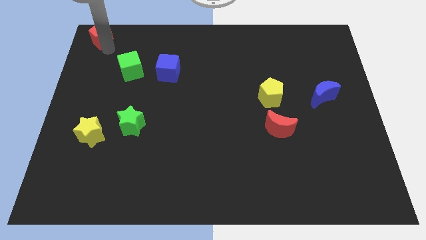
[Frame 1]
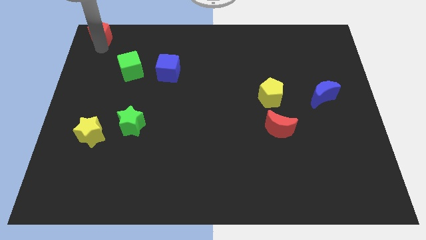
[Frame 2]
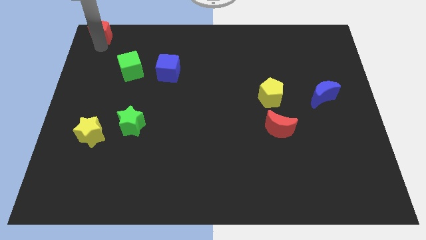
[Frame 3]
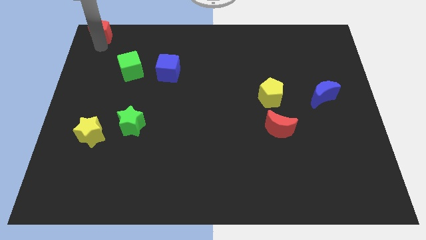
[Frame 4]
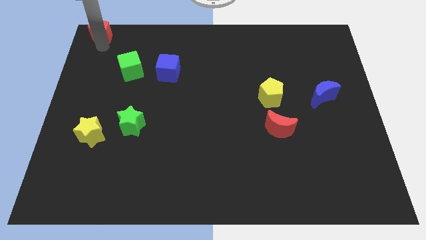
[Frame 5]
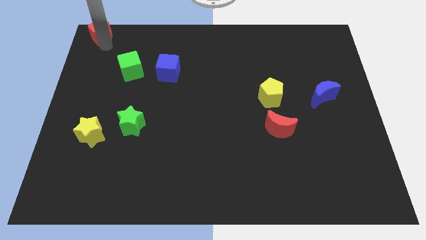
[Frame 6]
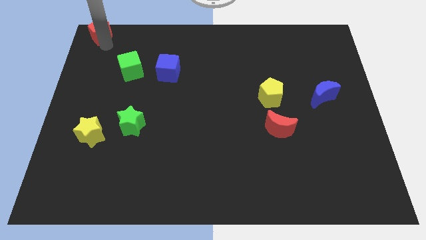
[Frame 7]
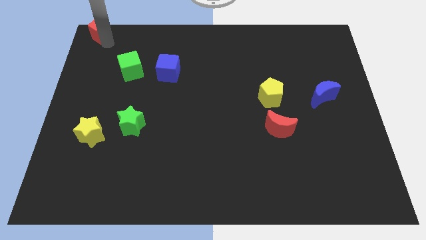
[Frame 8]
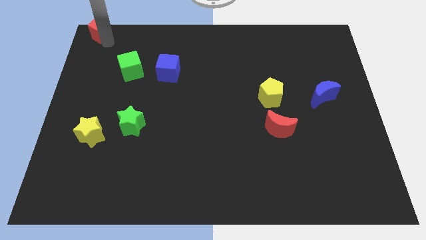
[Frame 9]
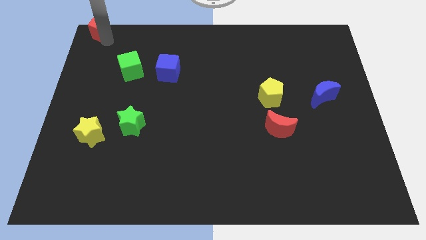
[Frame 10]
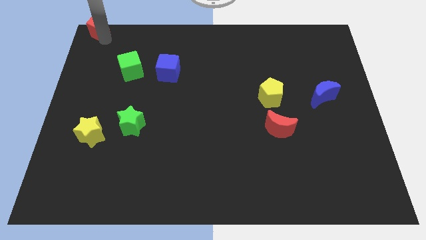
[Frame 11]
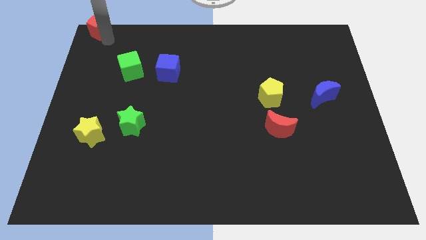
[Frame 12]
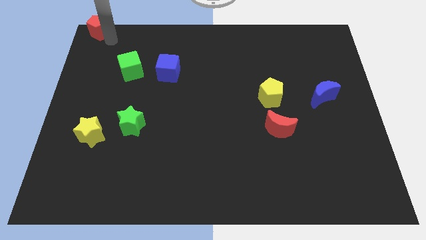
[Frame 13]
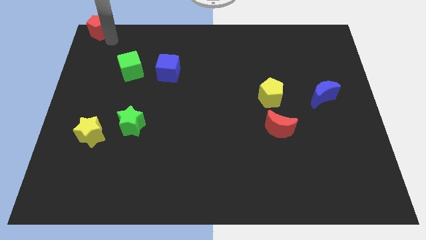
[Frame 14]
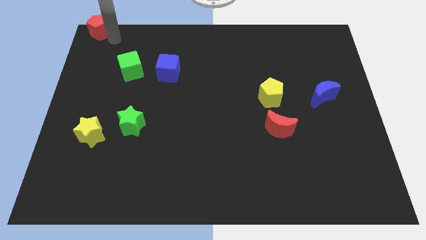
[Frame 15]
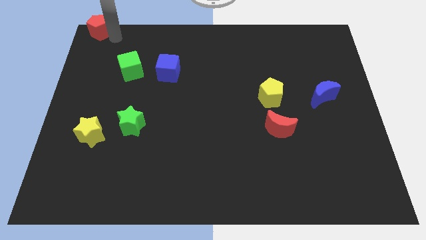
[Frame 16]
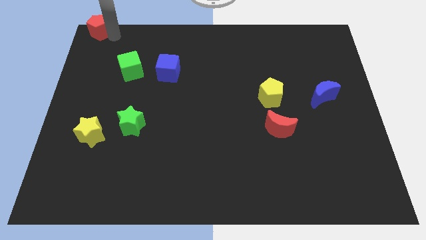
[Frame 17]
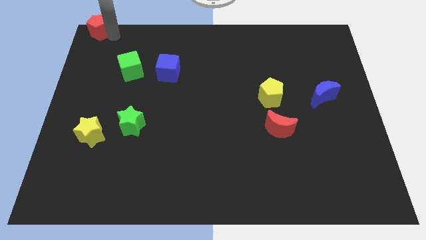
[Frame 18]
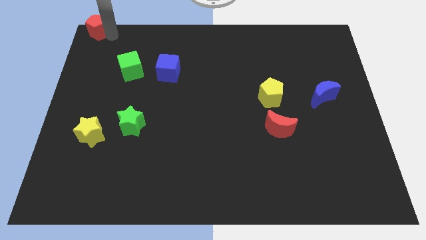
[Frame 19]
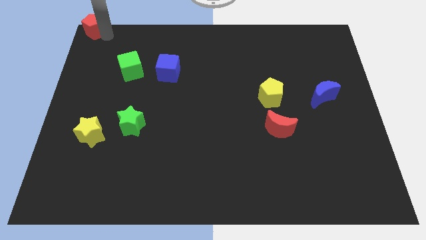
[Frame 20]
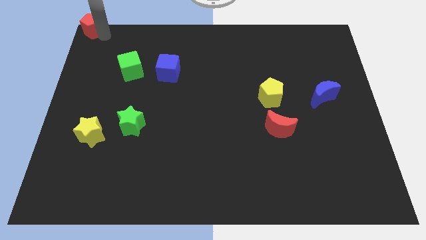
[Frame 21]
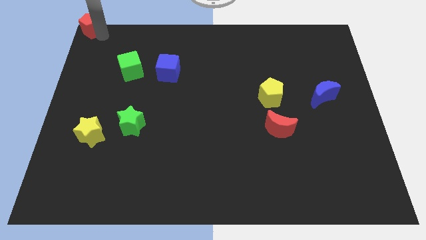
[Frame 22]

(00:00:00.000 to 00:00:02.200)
place red pentagon to the top left corner

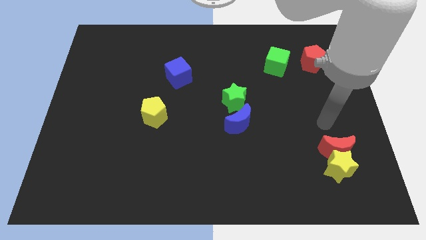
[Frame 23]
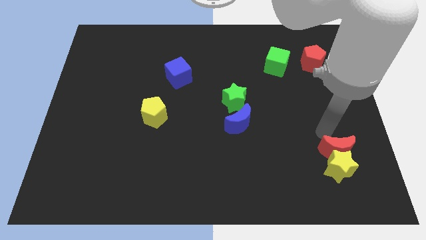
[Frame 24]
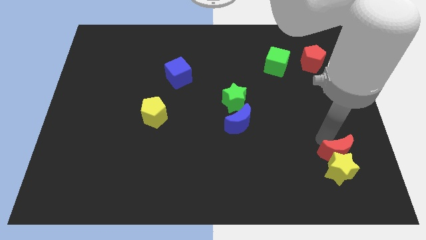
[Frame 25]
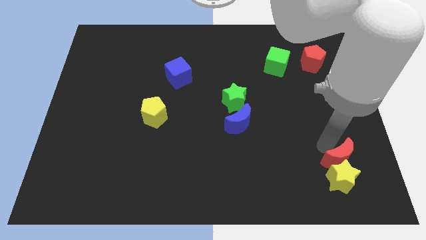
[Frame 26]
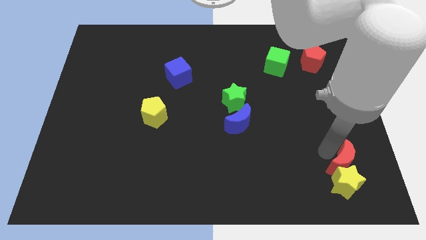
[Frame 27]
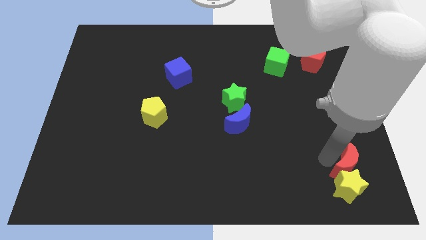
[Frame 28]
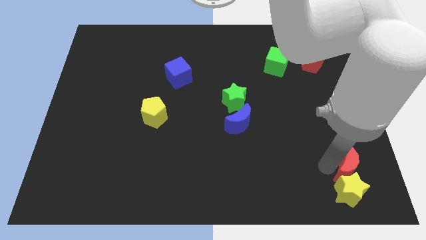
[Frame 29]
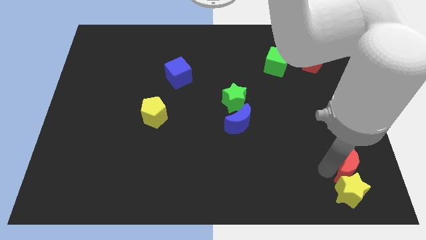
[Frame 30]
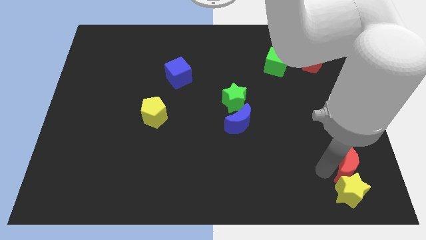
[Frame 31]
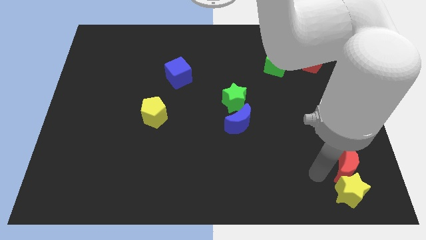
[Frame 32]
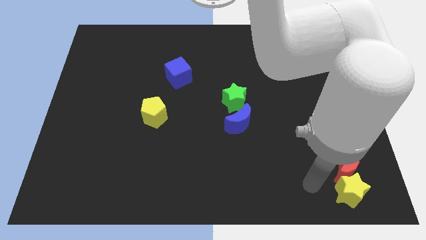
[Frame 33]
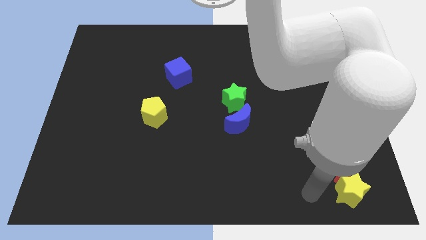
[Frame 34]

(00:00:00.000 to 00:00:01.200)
move red moon and yellow star to the bottom

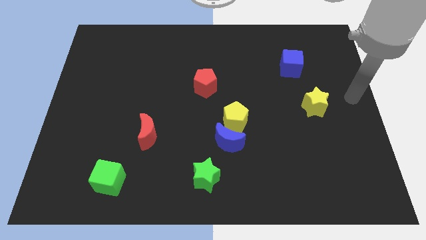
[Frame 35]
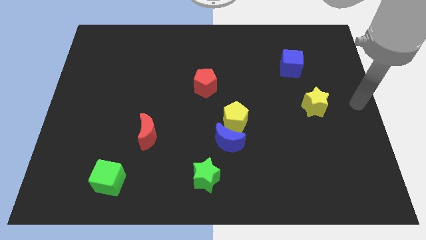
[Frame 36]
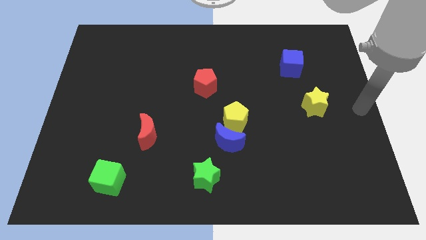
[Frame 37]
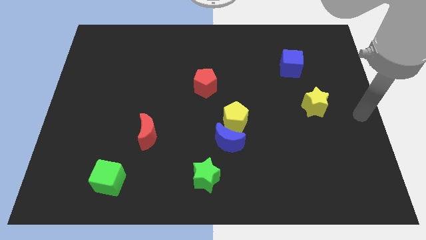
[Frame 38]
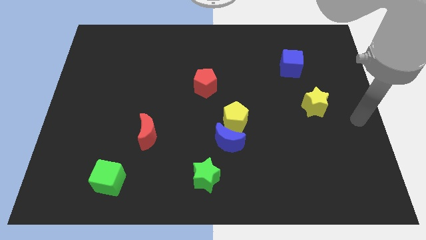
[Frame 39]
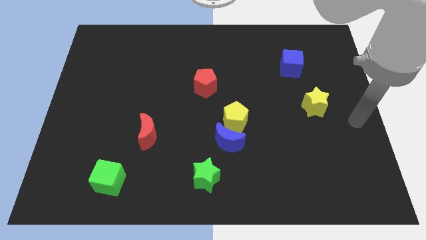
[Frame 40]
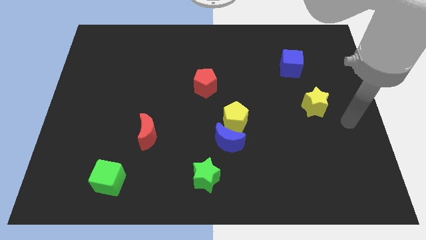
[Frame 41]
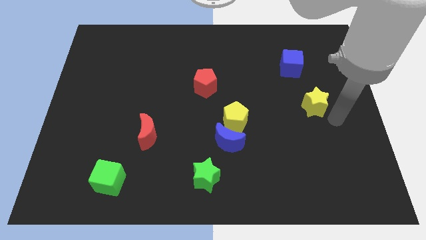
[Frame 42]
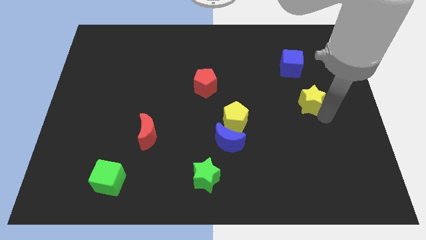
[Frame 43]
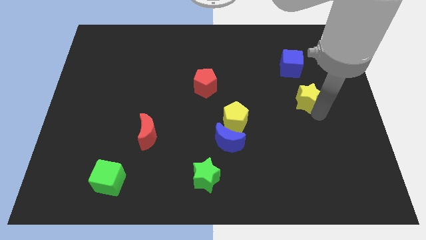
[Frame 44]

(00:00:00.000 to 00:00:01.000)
touch the bottom of yellow star

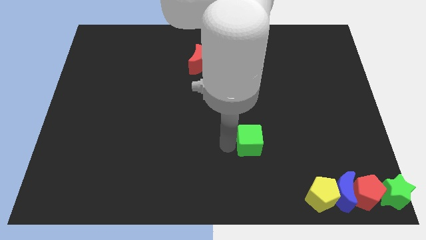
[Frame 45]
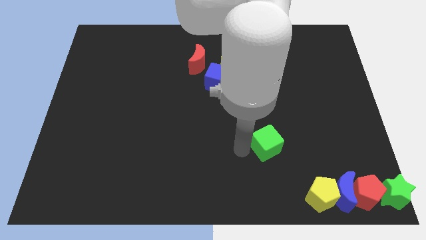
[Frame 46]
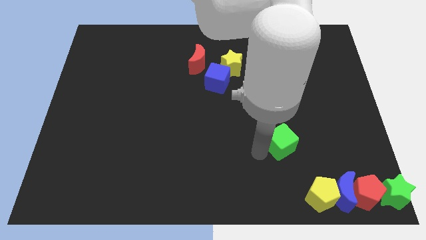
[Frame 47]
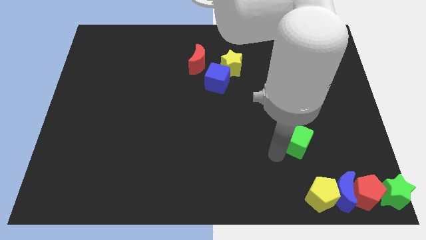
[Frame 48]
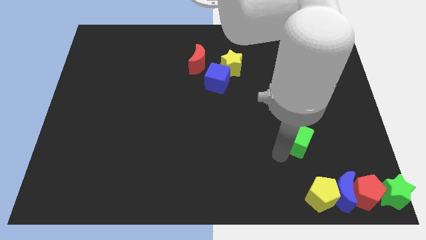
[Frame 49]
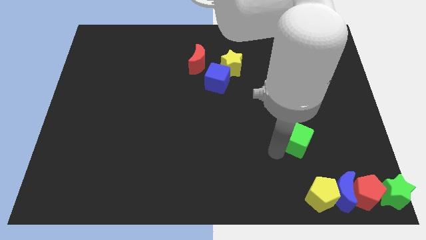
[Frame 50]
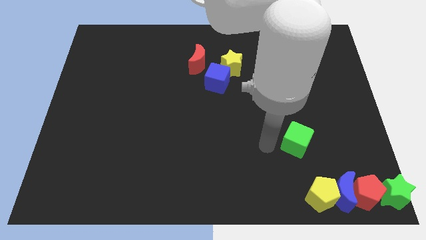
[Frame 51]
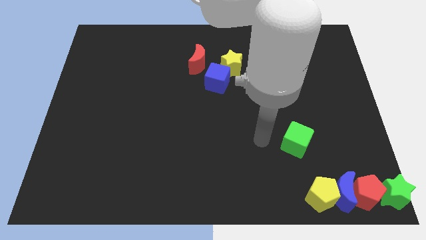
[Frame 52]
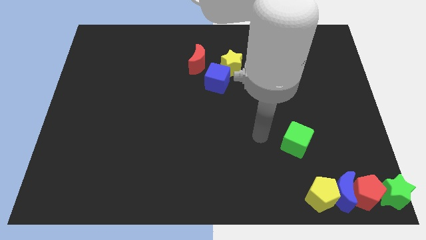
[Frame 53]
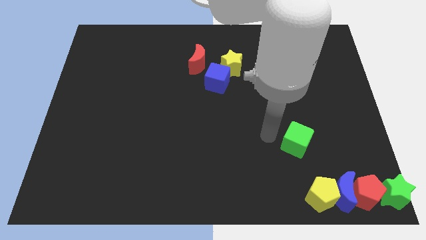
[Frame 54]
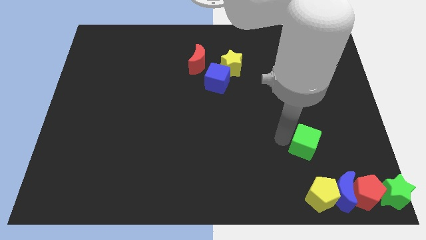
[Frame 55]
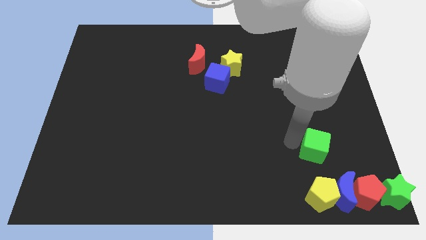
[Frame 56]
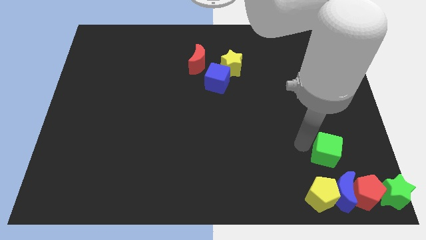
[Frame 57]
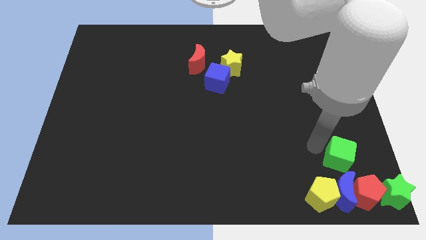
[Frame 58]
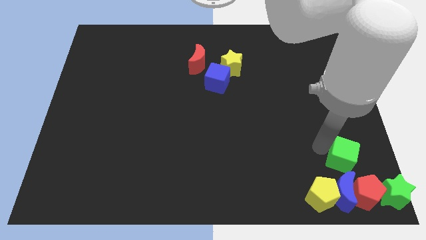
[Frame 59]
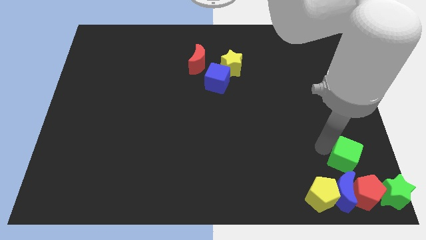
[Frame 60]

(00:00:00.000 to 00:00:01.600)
push the green cube to the top of the blue crescent

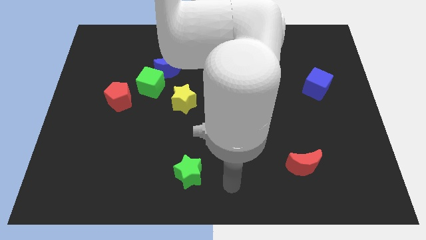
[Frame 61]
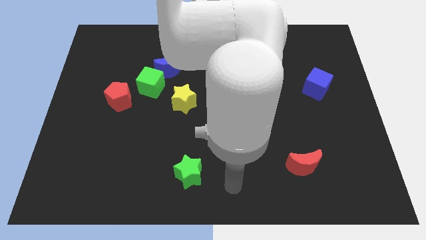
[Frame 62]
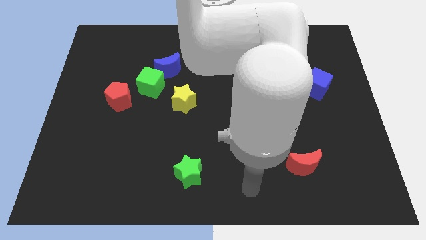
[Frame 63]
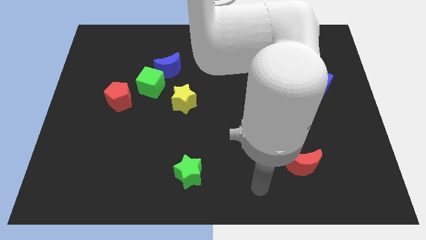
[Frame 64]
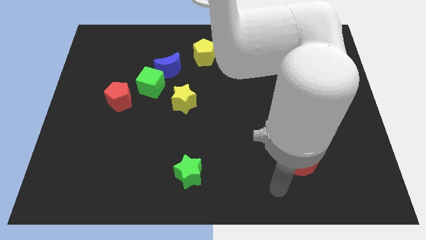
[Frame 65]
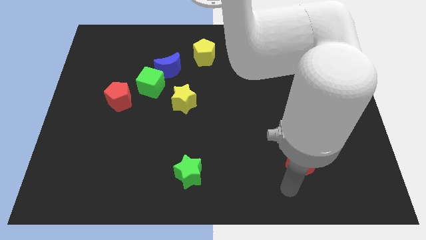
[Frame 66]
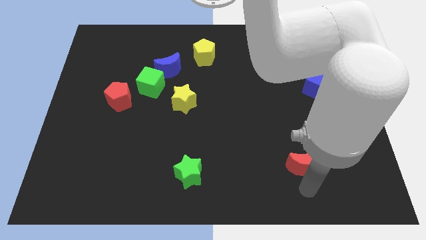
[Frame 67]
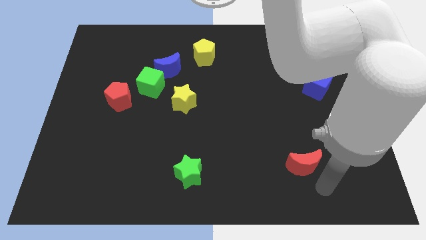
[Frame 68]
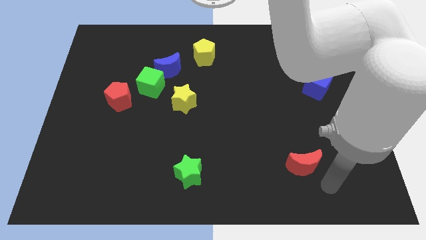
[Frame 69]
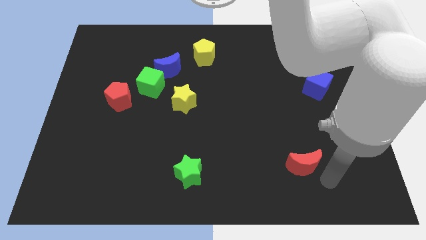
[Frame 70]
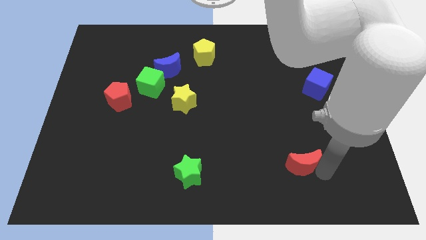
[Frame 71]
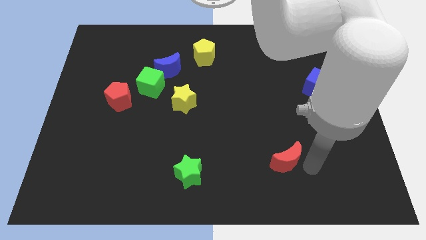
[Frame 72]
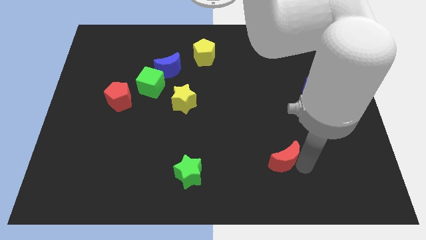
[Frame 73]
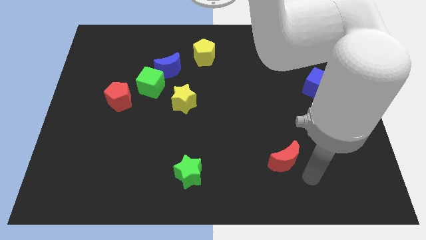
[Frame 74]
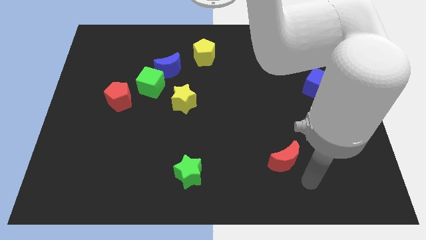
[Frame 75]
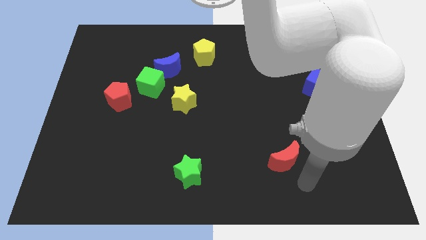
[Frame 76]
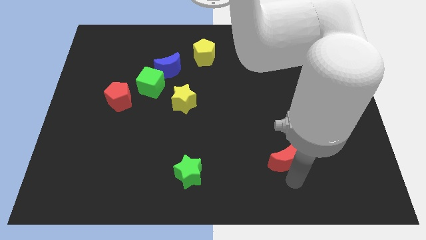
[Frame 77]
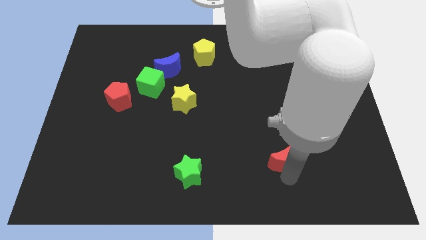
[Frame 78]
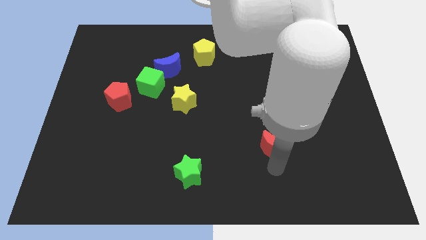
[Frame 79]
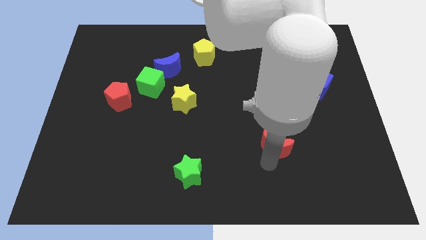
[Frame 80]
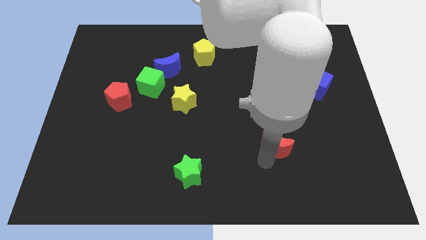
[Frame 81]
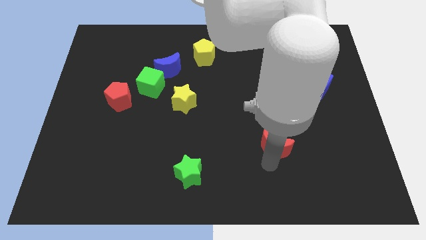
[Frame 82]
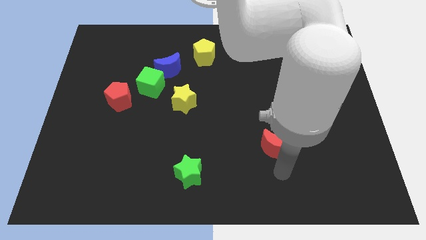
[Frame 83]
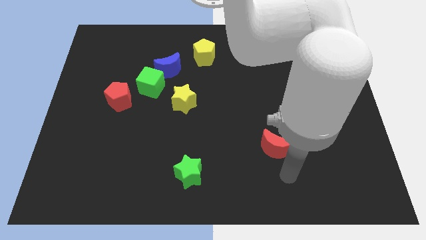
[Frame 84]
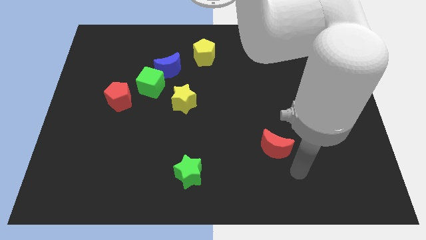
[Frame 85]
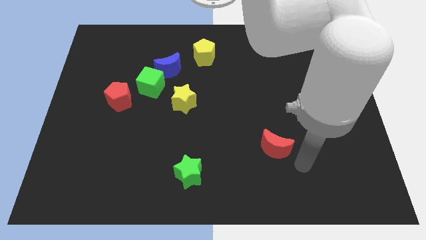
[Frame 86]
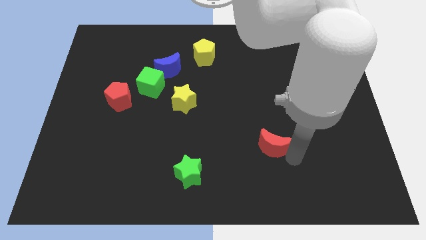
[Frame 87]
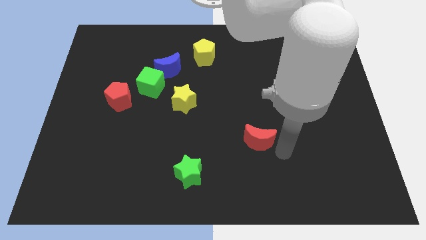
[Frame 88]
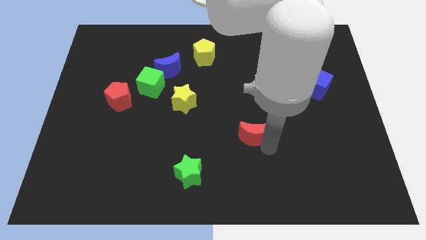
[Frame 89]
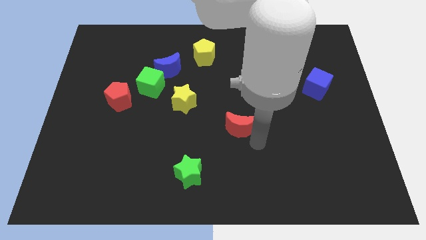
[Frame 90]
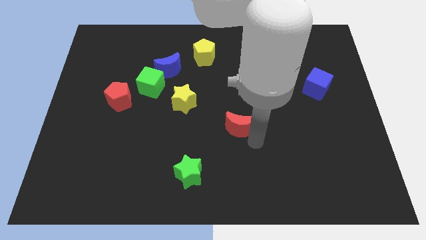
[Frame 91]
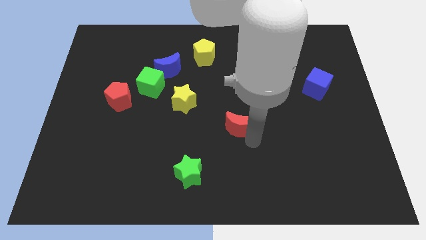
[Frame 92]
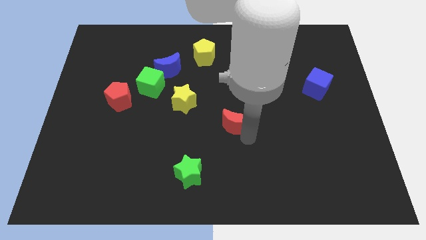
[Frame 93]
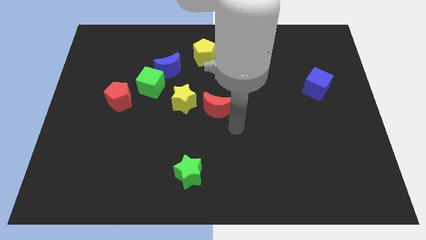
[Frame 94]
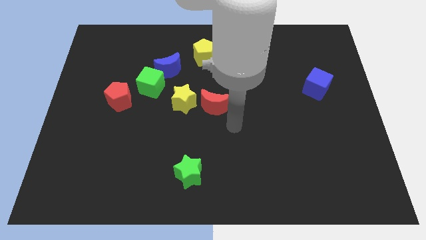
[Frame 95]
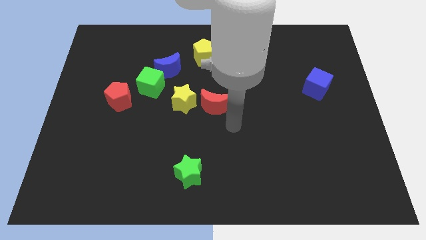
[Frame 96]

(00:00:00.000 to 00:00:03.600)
move red moon right beside the yellow star
